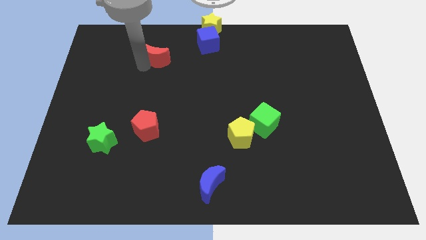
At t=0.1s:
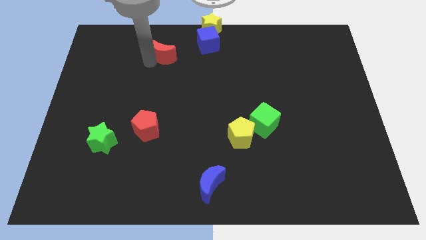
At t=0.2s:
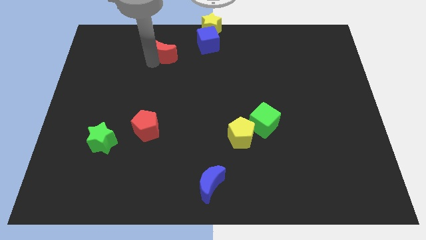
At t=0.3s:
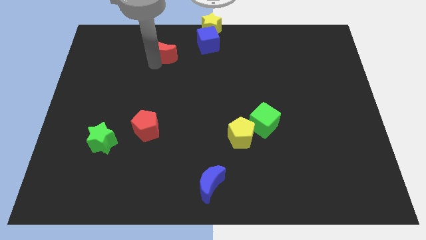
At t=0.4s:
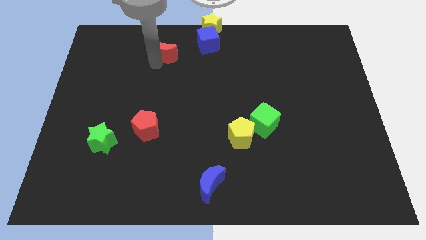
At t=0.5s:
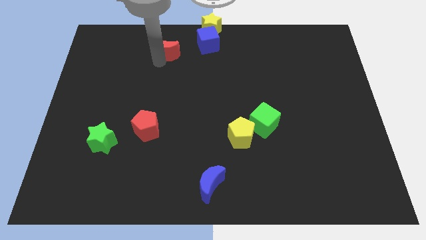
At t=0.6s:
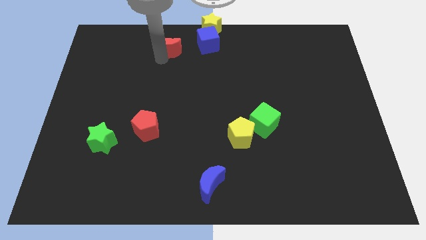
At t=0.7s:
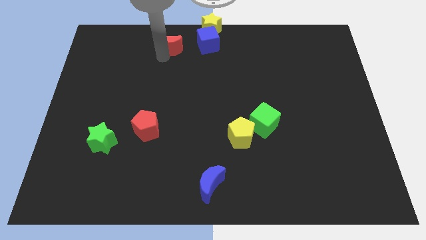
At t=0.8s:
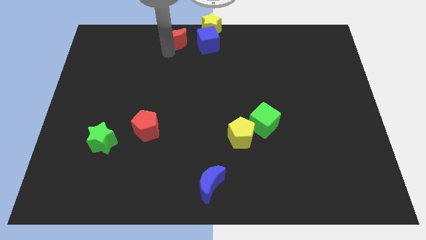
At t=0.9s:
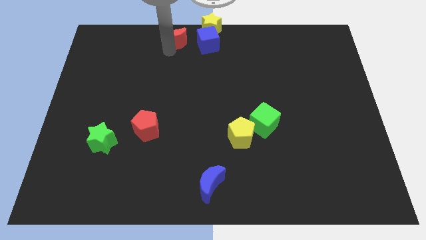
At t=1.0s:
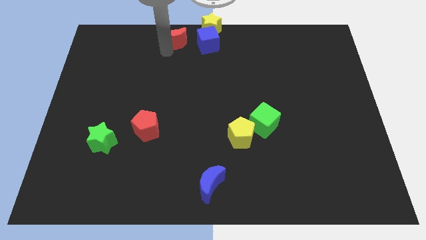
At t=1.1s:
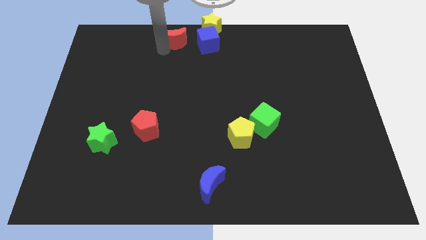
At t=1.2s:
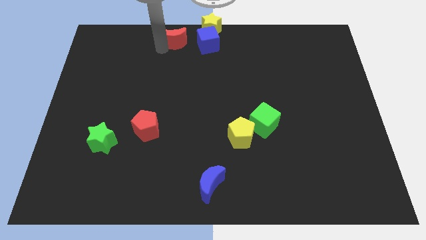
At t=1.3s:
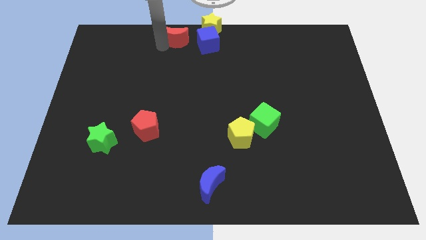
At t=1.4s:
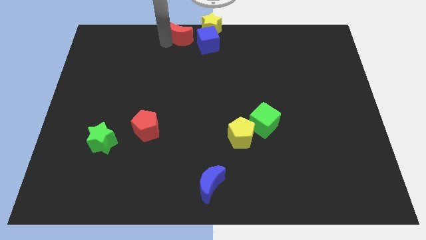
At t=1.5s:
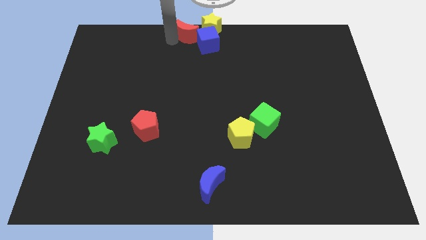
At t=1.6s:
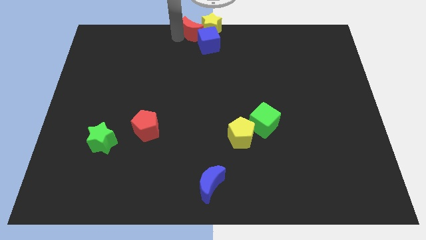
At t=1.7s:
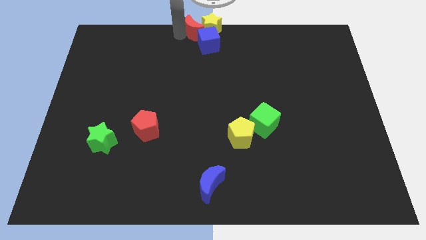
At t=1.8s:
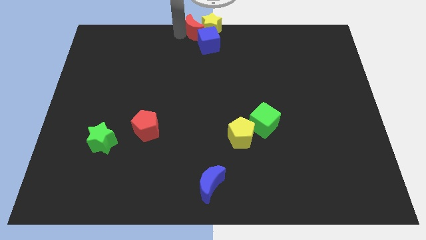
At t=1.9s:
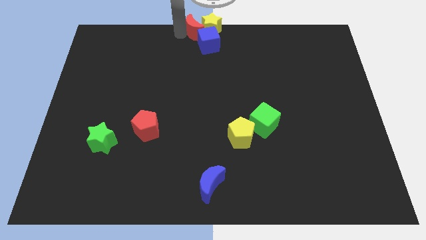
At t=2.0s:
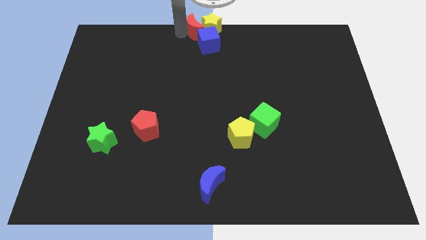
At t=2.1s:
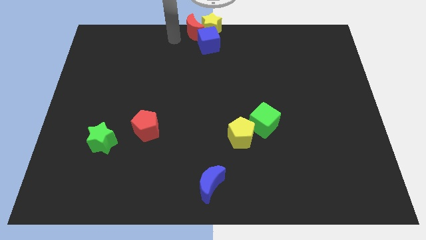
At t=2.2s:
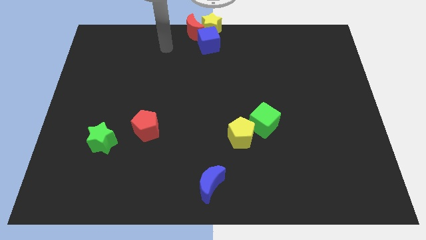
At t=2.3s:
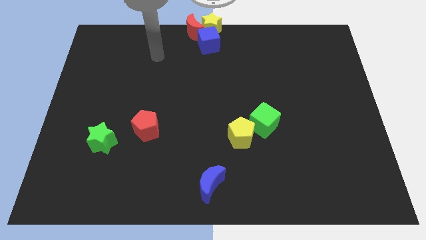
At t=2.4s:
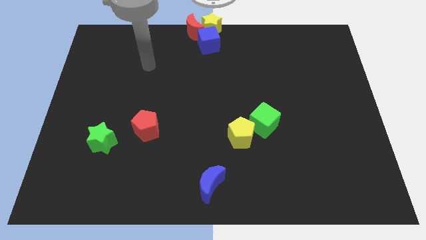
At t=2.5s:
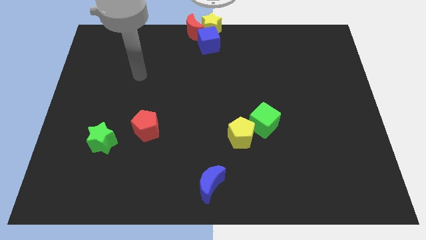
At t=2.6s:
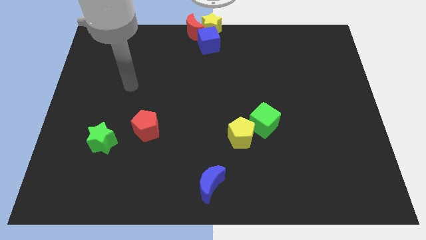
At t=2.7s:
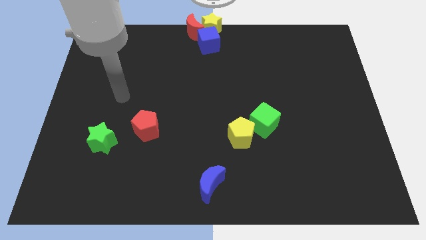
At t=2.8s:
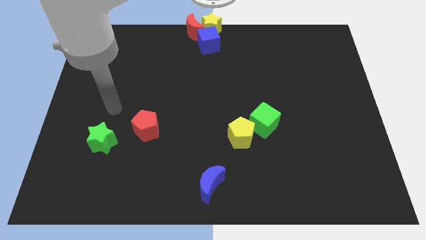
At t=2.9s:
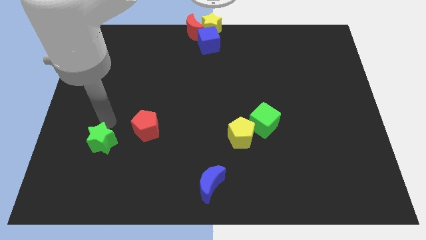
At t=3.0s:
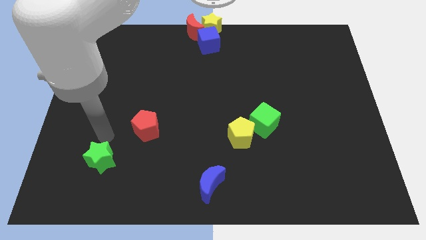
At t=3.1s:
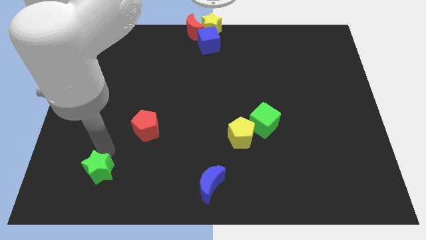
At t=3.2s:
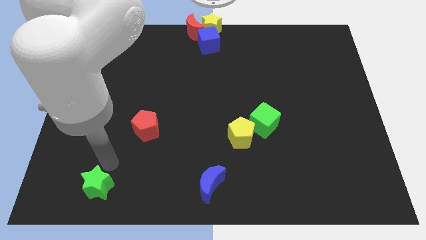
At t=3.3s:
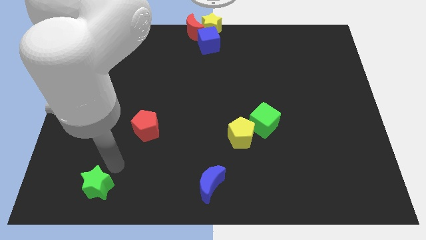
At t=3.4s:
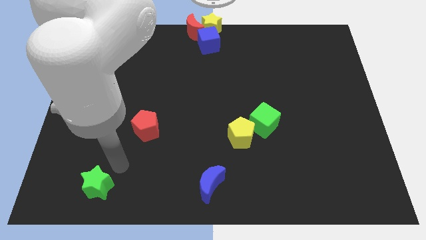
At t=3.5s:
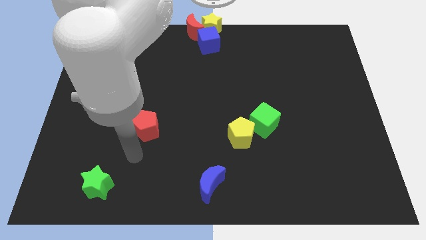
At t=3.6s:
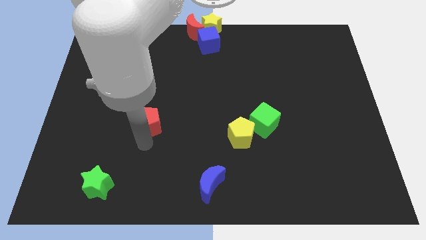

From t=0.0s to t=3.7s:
place the arm down to the red pentagon

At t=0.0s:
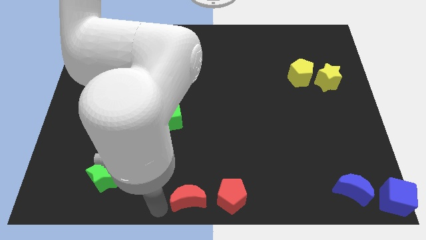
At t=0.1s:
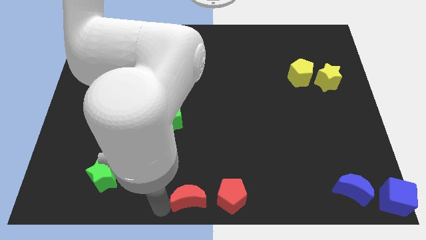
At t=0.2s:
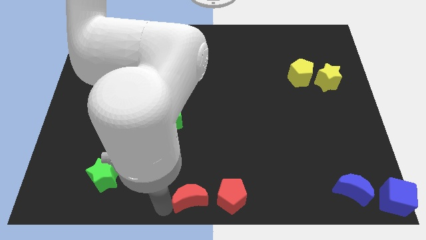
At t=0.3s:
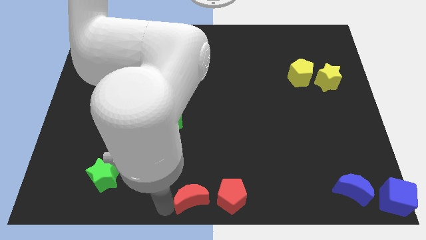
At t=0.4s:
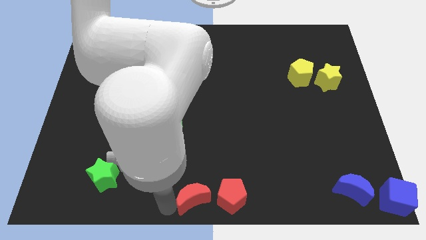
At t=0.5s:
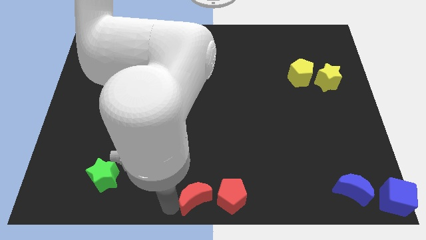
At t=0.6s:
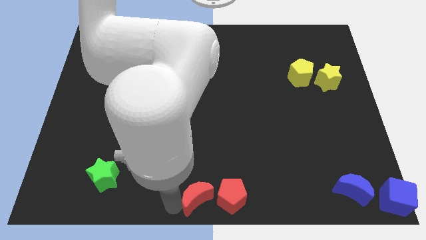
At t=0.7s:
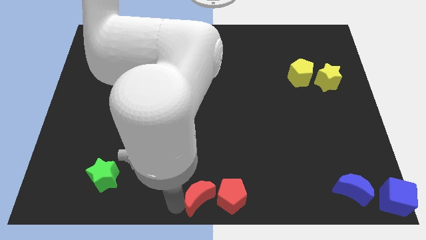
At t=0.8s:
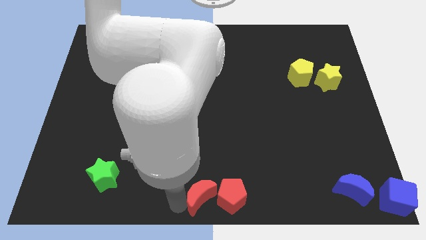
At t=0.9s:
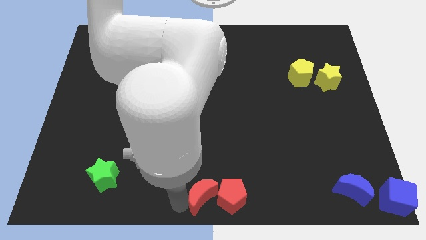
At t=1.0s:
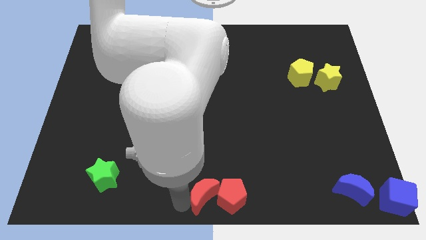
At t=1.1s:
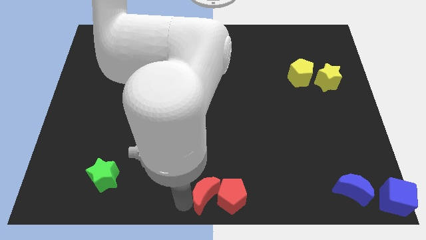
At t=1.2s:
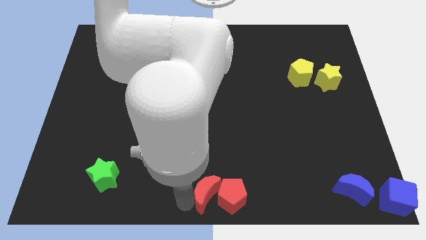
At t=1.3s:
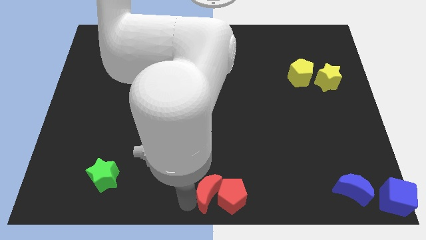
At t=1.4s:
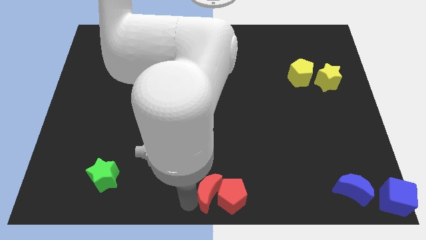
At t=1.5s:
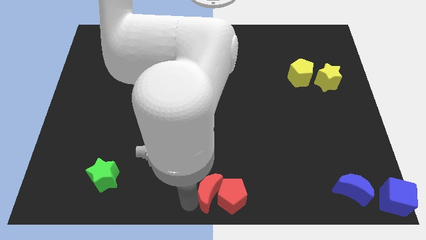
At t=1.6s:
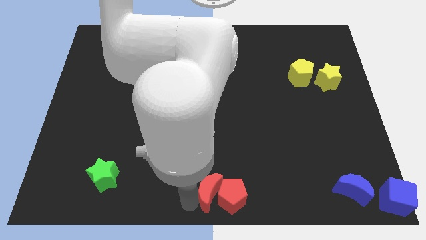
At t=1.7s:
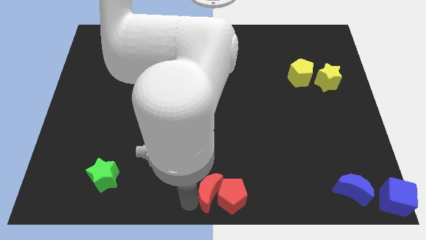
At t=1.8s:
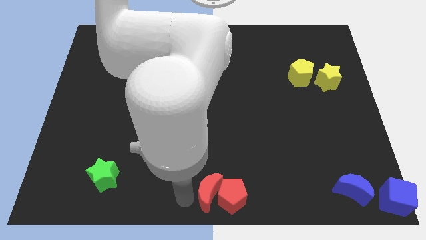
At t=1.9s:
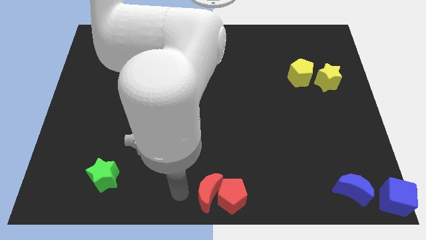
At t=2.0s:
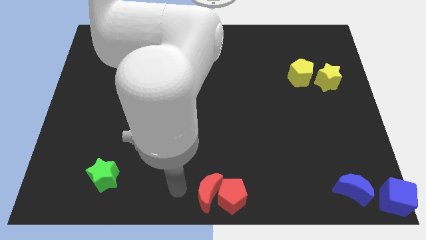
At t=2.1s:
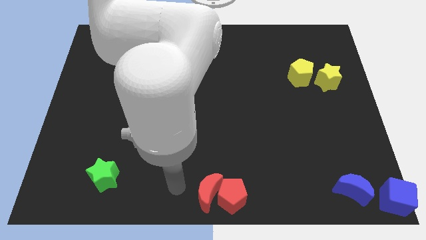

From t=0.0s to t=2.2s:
move the red moon into the red pentagon

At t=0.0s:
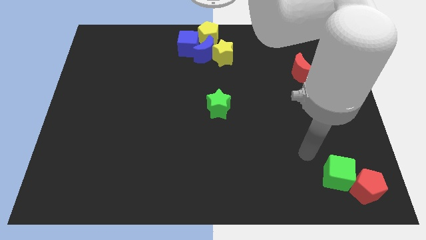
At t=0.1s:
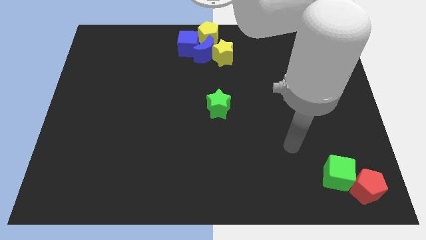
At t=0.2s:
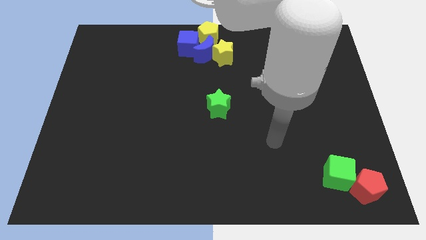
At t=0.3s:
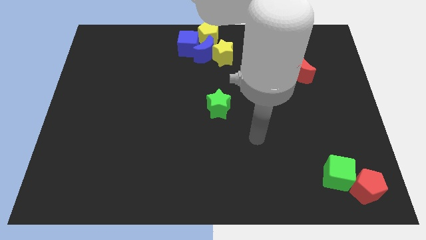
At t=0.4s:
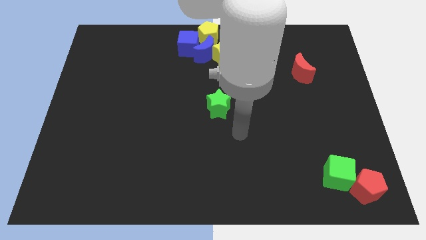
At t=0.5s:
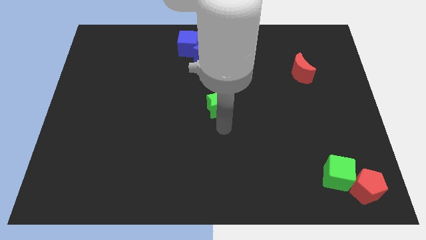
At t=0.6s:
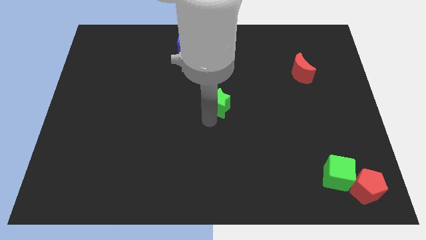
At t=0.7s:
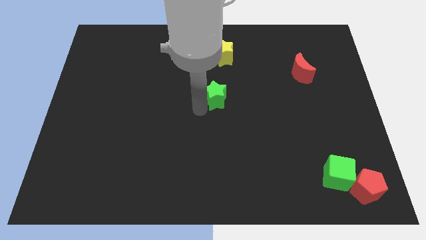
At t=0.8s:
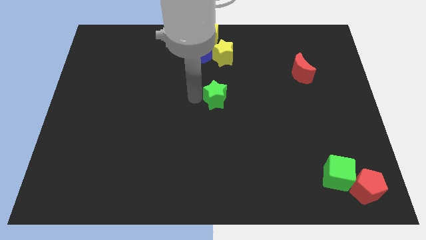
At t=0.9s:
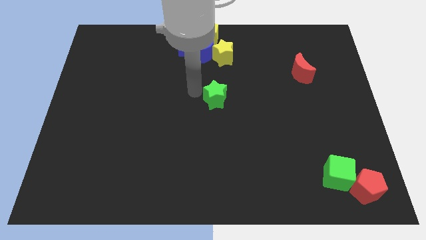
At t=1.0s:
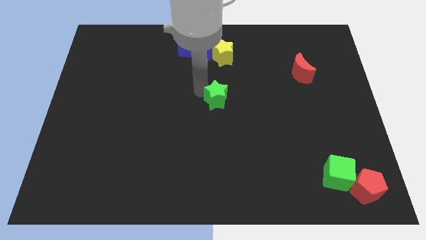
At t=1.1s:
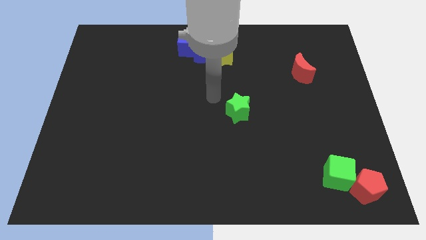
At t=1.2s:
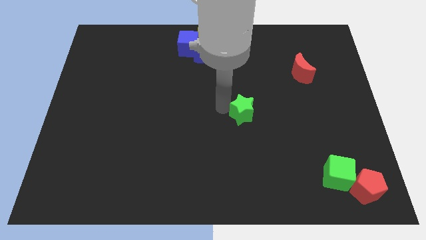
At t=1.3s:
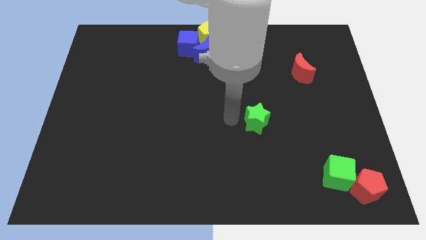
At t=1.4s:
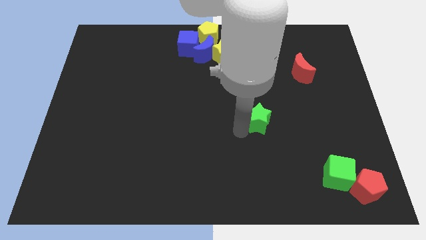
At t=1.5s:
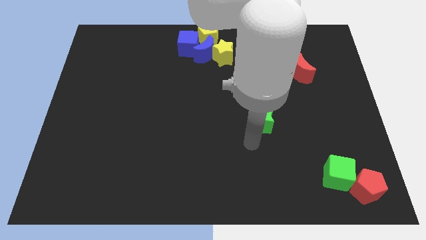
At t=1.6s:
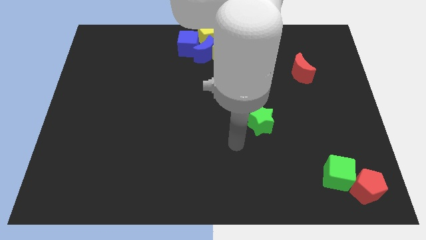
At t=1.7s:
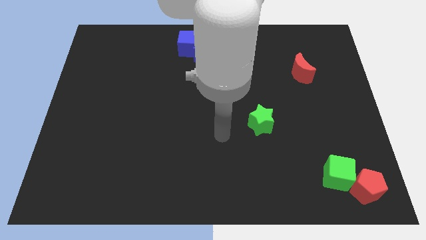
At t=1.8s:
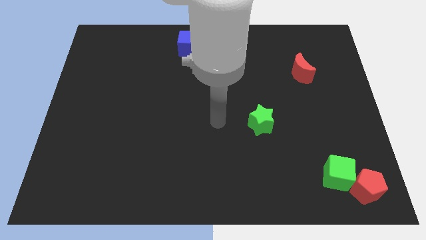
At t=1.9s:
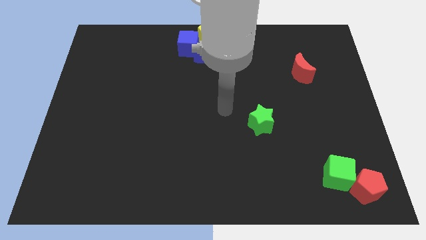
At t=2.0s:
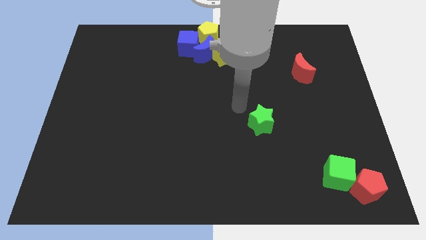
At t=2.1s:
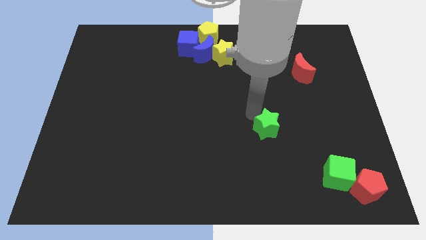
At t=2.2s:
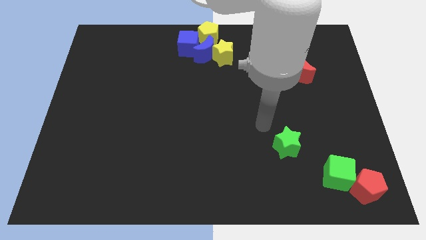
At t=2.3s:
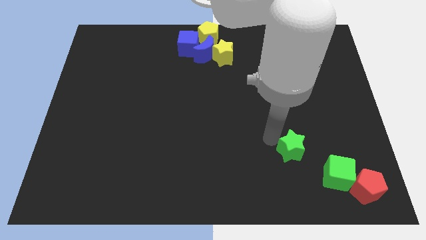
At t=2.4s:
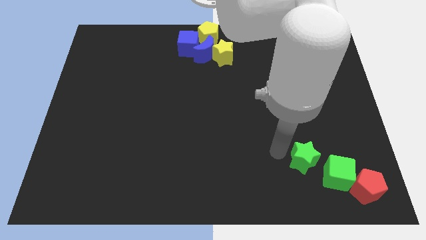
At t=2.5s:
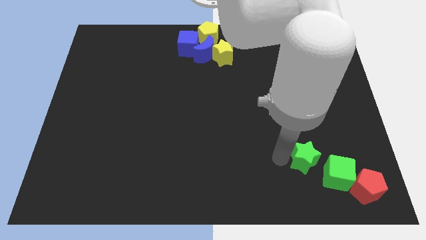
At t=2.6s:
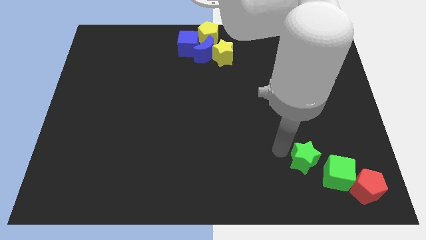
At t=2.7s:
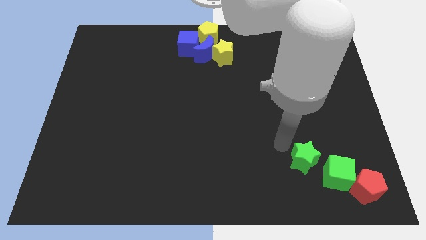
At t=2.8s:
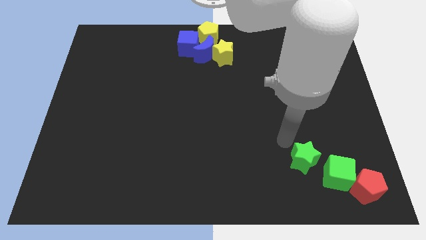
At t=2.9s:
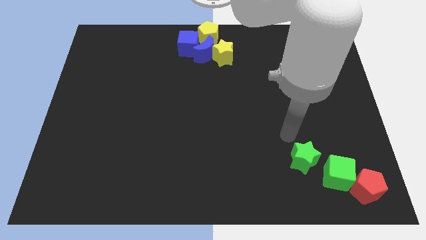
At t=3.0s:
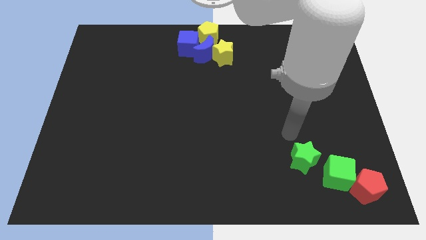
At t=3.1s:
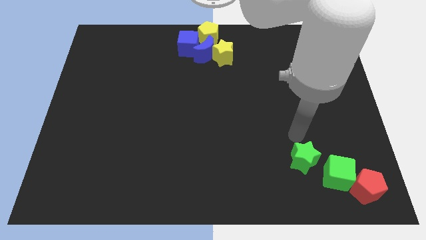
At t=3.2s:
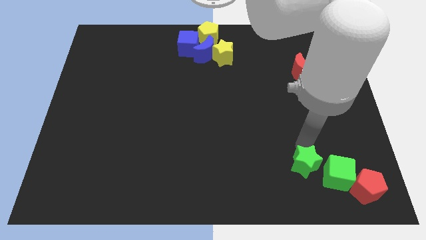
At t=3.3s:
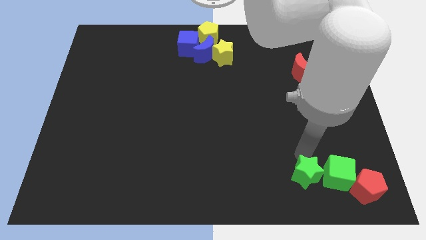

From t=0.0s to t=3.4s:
push the green star to the left side of the green cube
